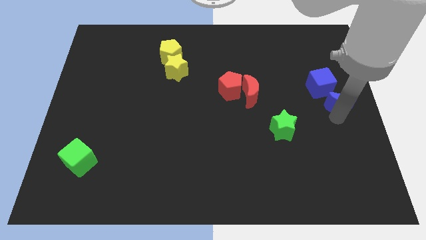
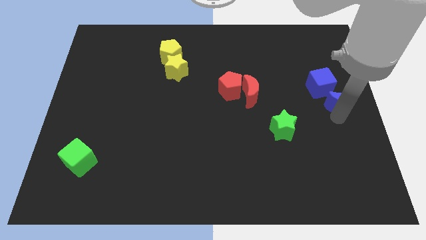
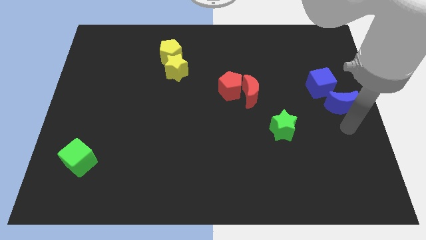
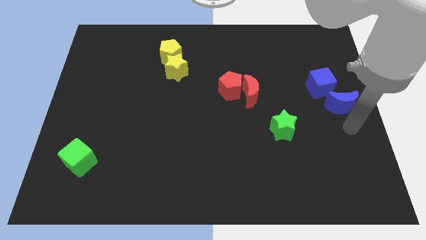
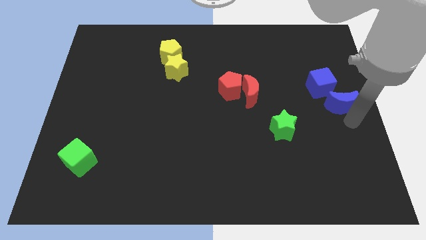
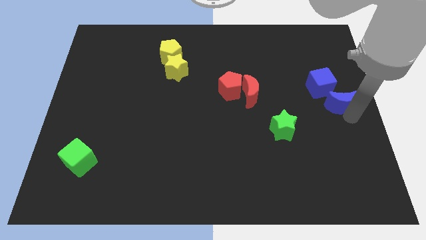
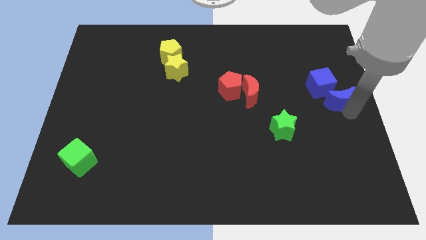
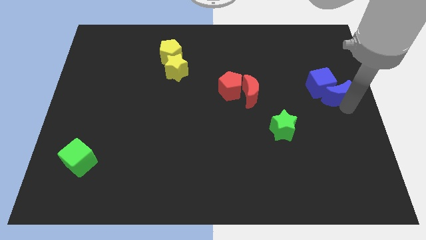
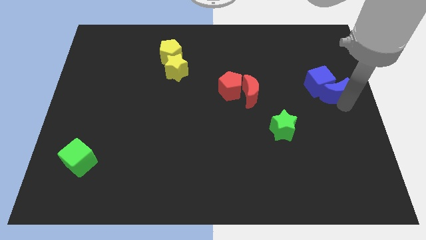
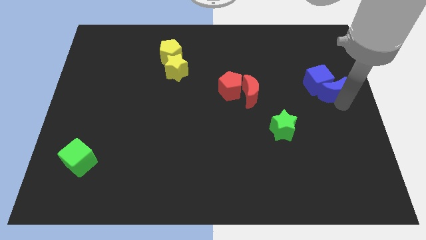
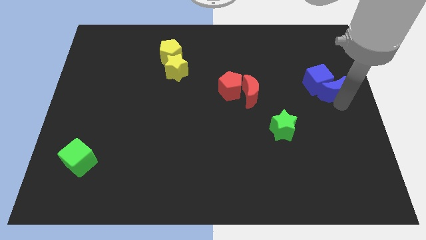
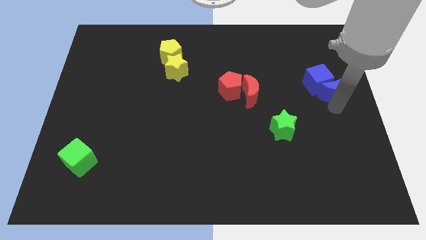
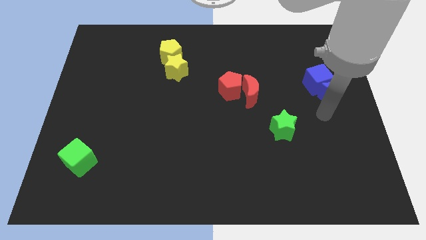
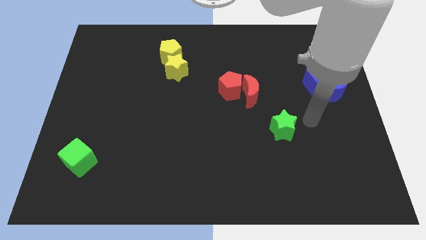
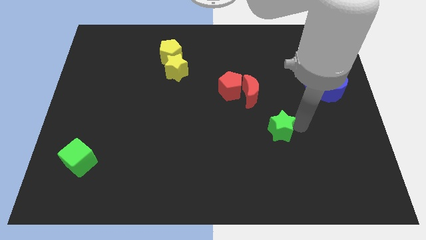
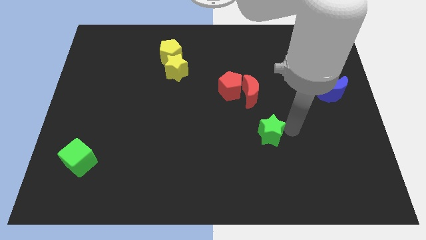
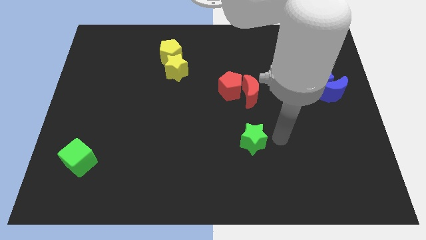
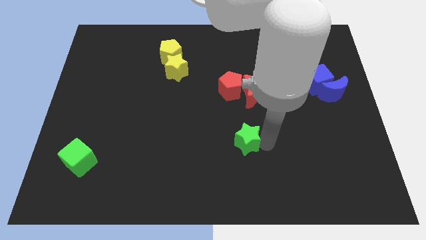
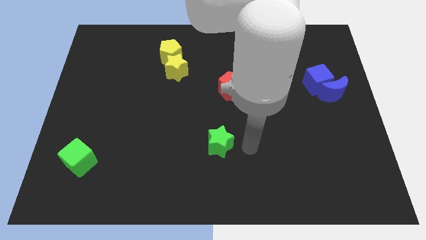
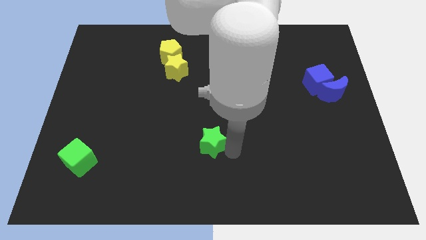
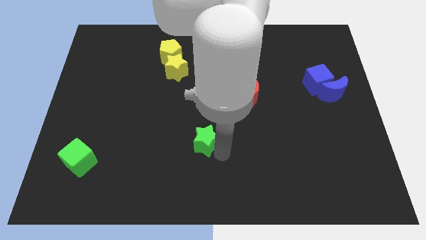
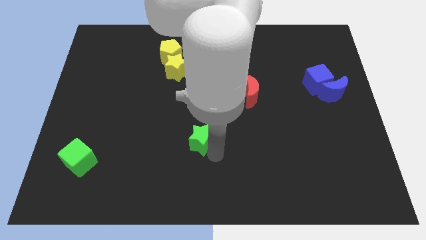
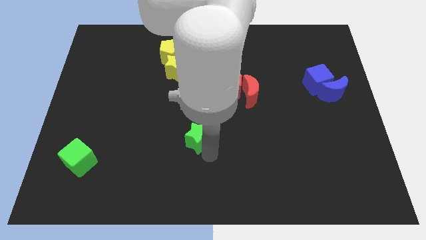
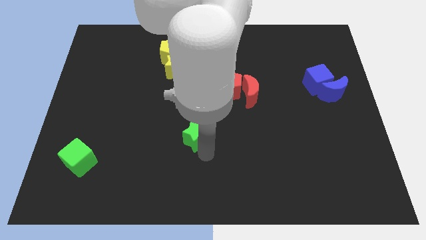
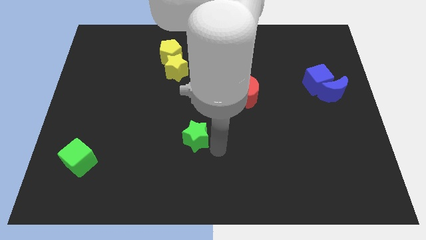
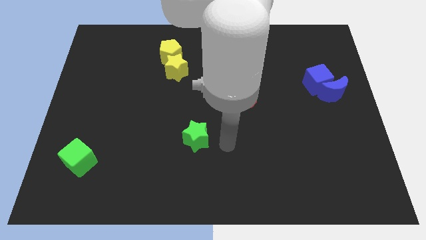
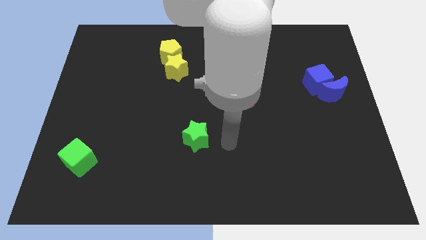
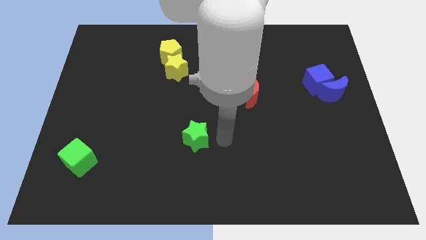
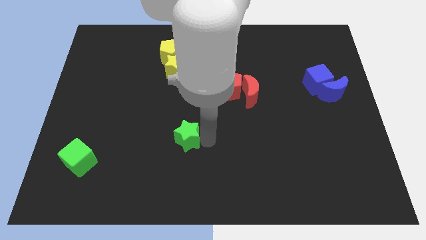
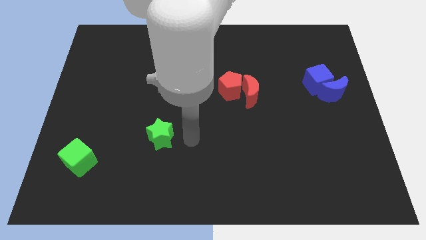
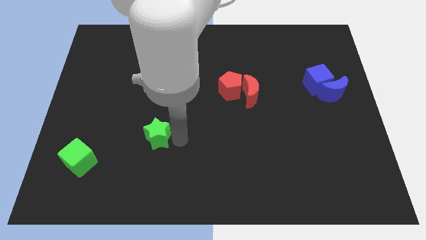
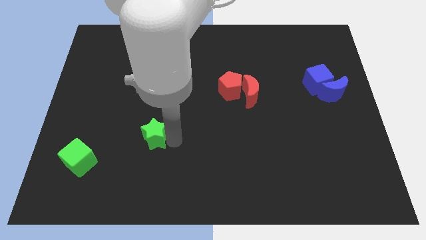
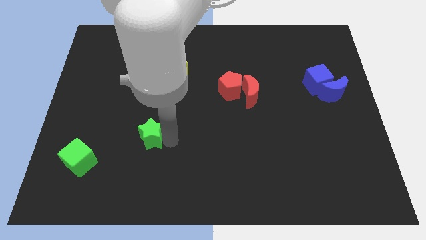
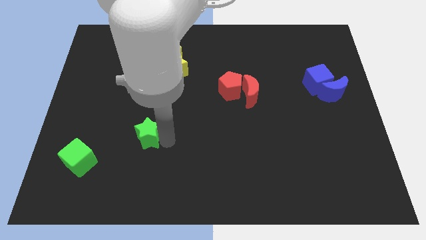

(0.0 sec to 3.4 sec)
drag the green star to the left

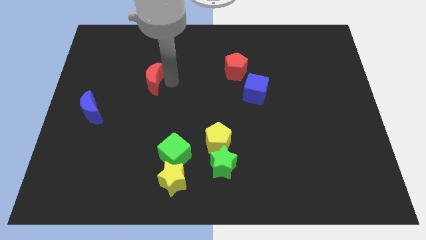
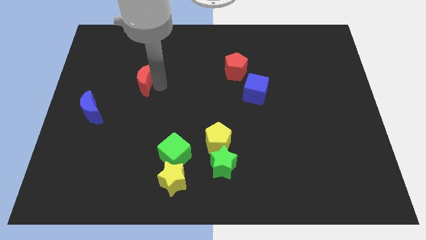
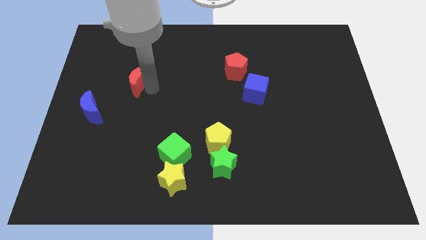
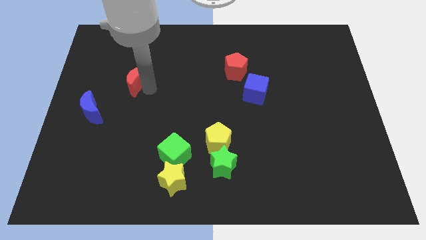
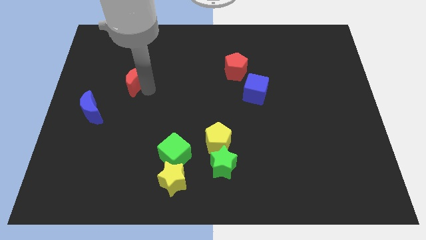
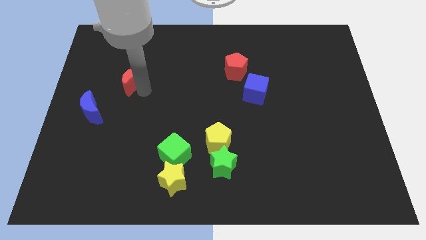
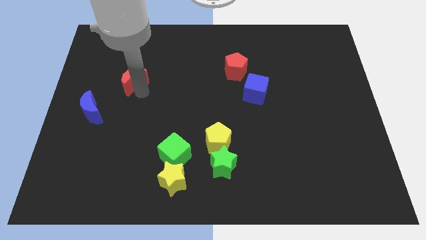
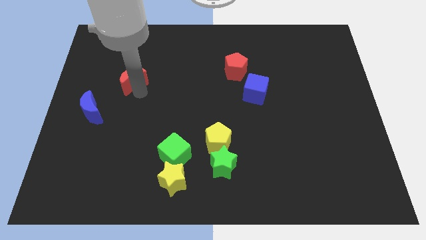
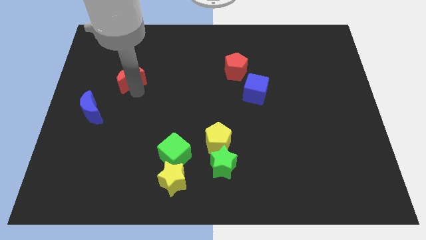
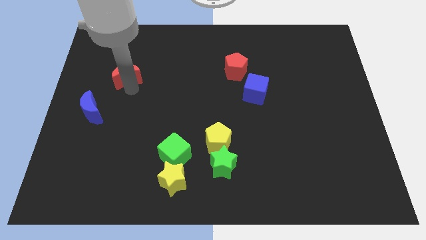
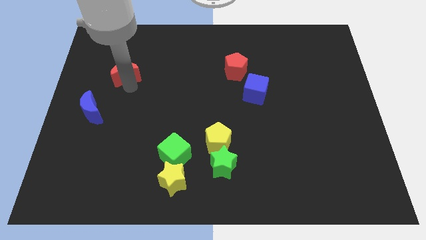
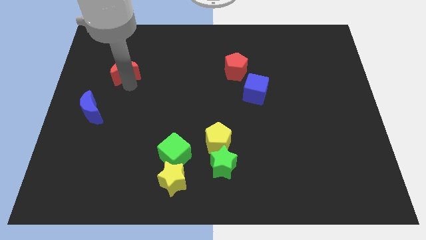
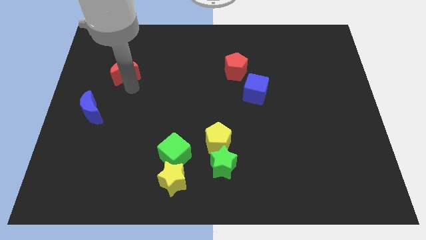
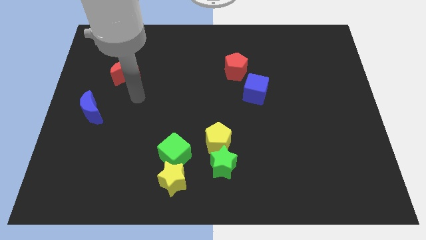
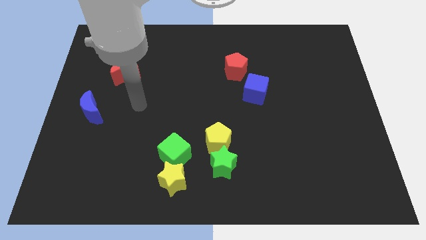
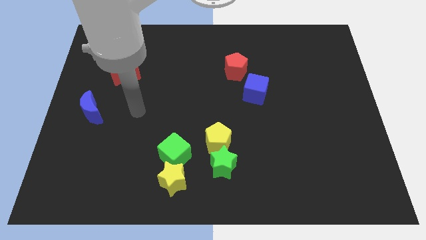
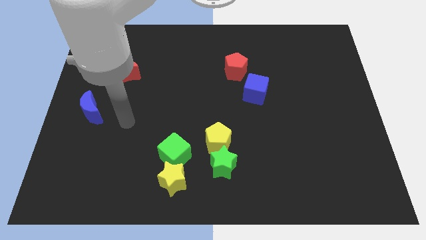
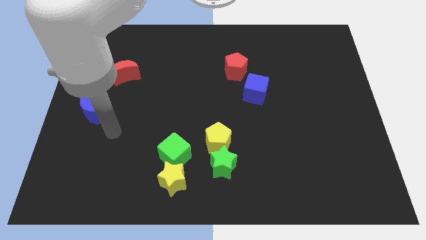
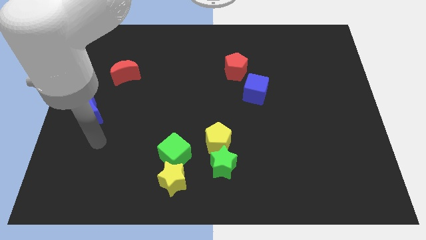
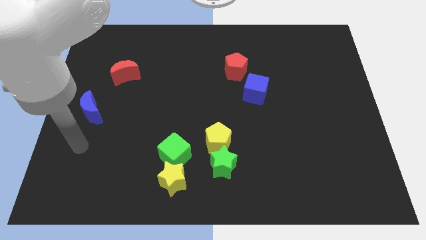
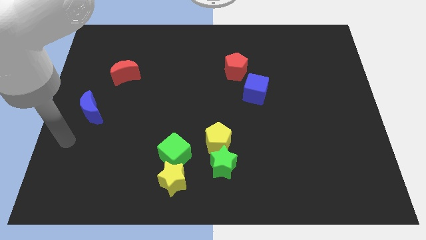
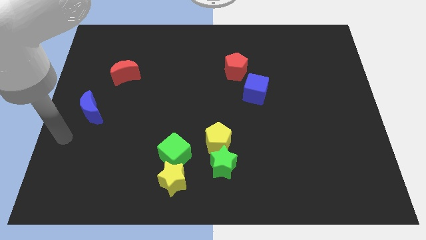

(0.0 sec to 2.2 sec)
drag the red crescent towards top side

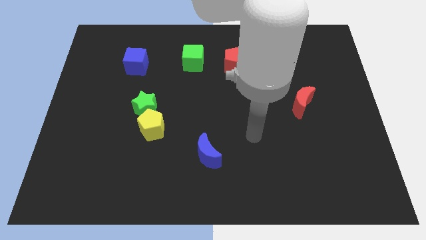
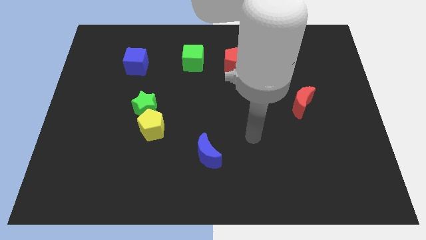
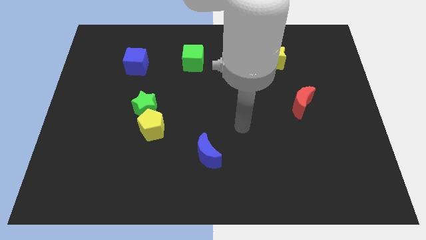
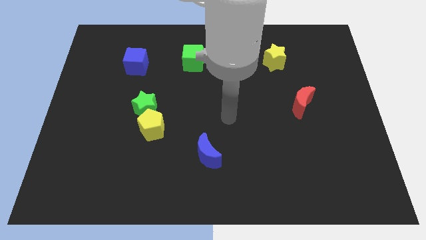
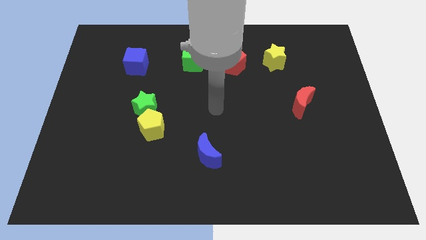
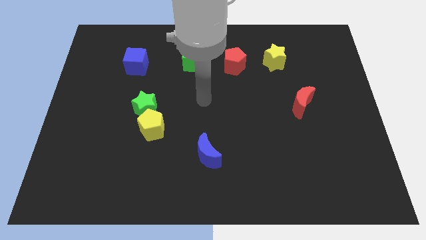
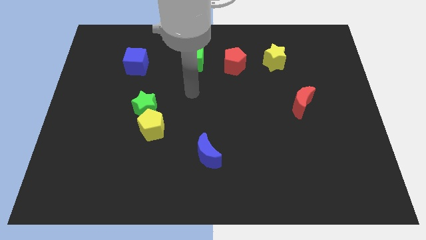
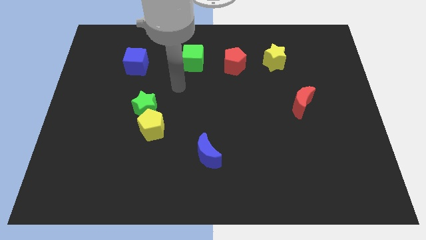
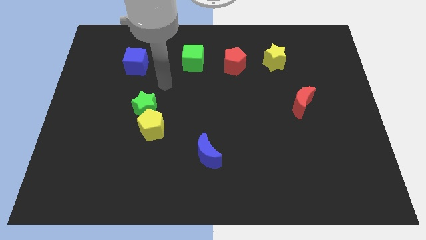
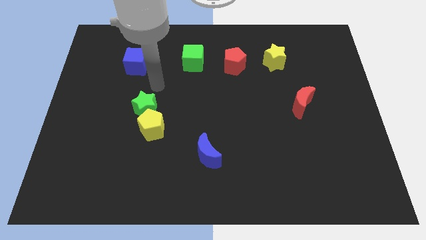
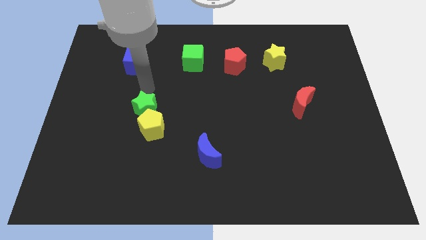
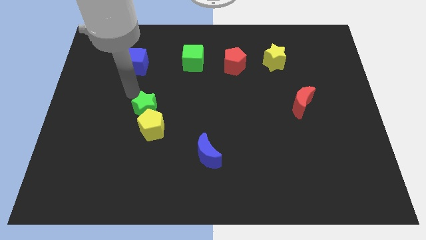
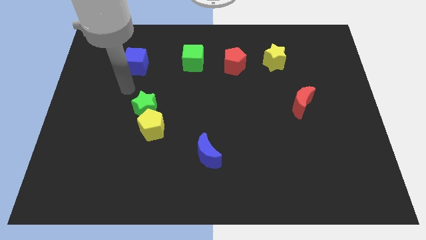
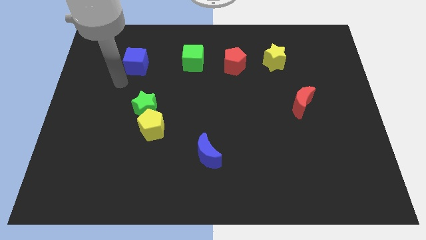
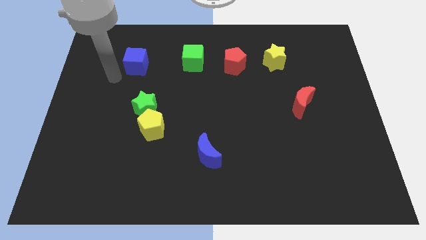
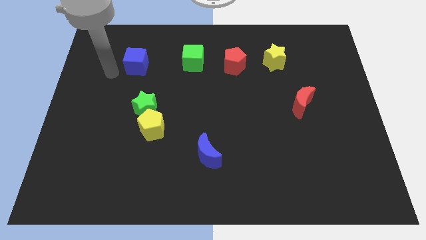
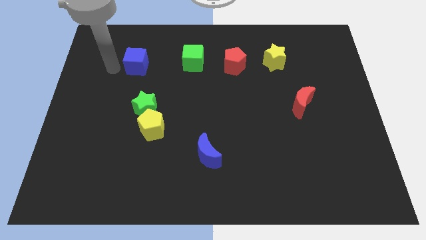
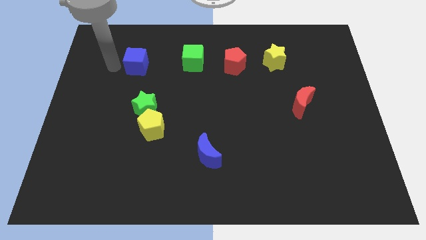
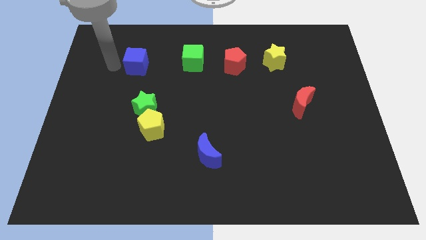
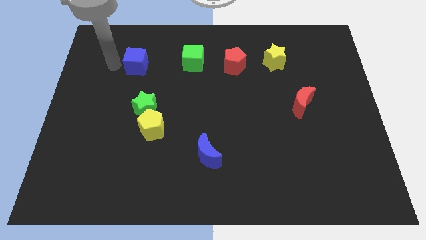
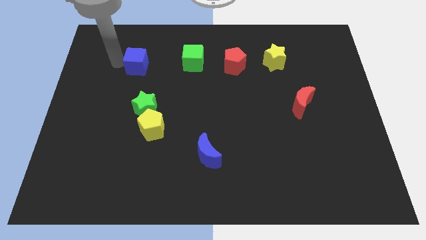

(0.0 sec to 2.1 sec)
go near the blue cube

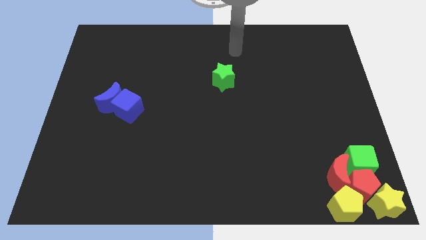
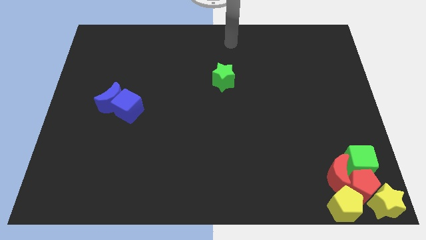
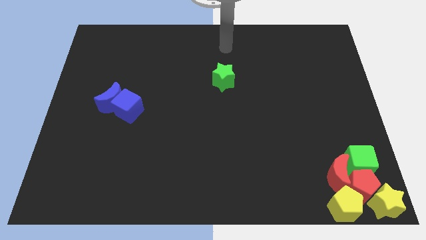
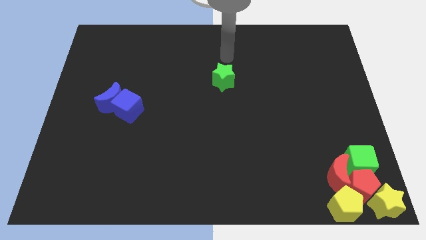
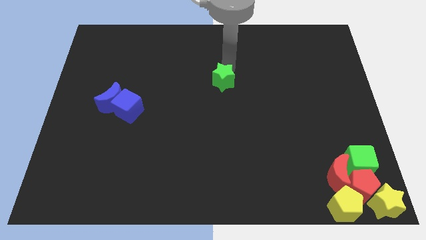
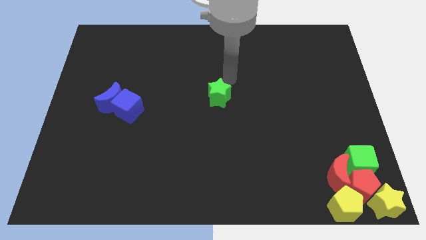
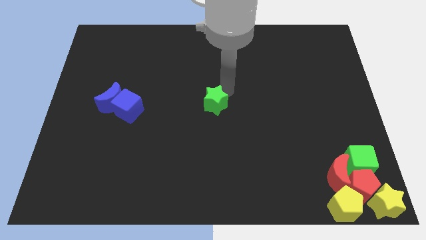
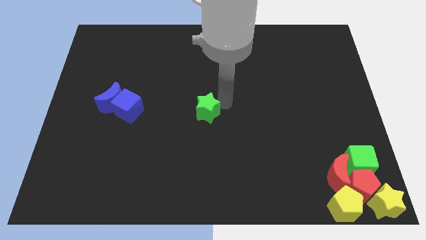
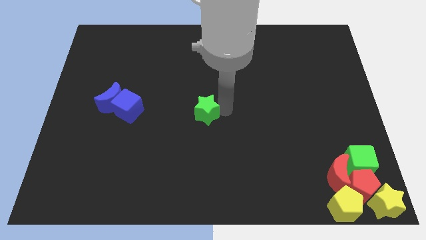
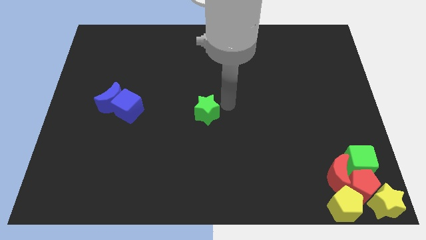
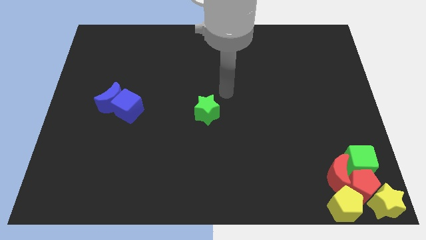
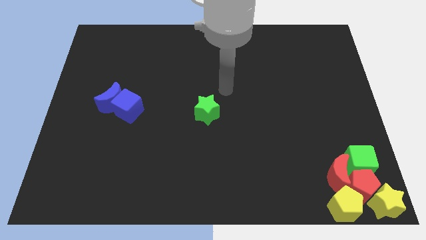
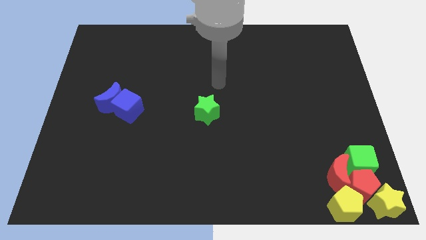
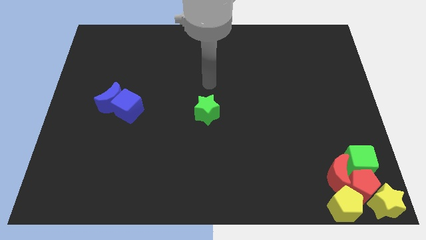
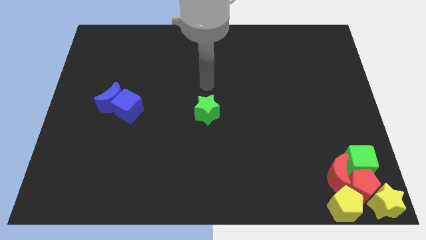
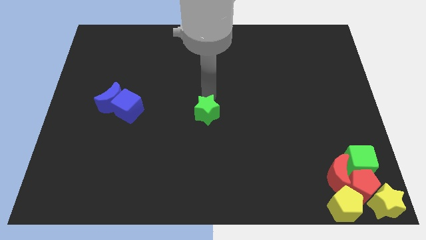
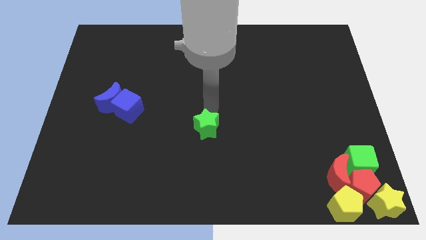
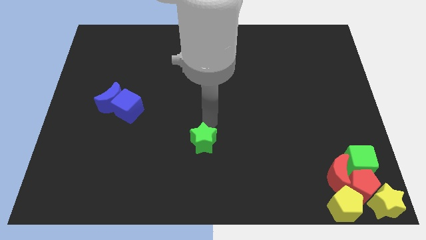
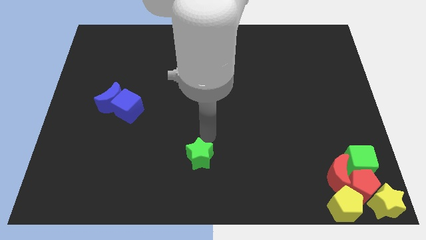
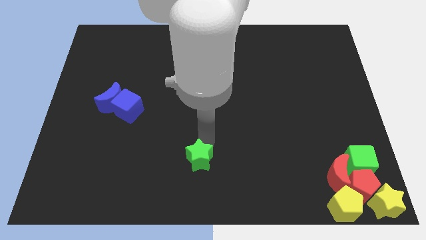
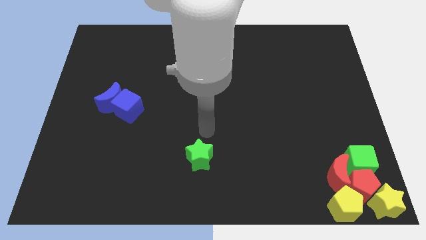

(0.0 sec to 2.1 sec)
put the green star diagonally bottom right to the blue blocks
